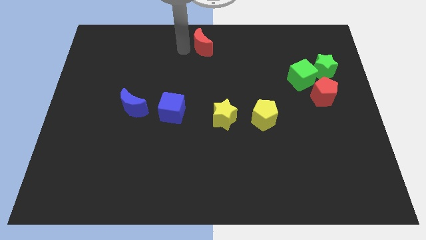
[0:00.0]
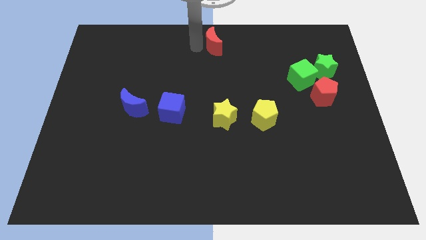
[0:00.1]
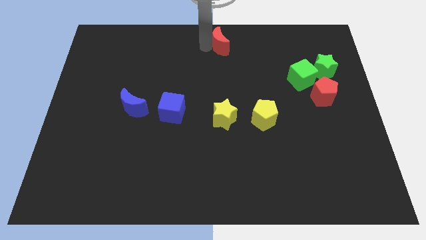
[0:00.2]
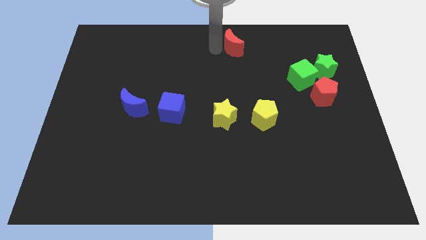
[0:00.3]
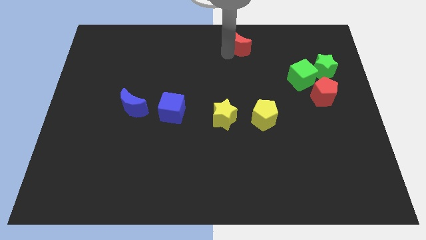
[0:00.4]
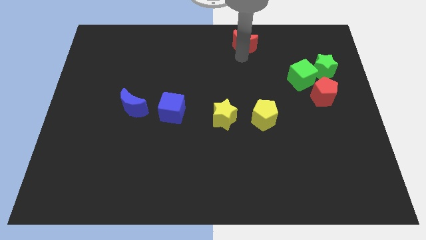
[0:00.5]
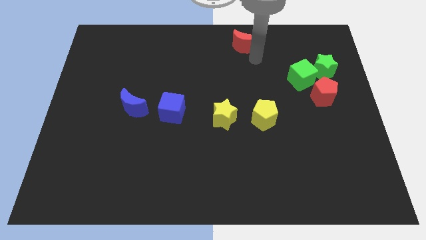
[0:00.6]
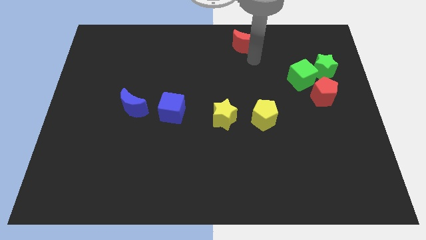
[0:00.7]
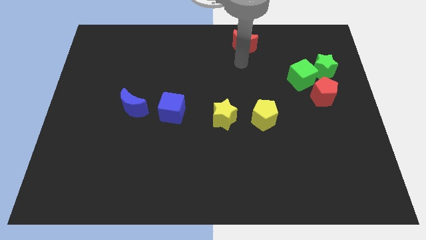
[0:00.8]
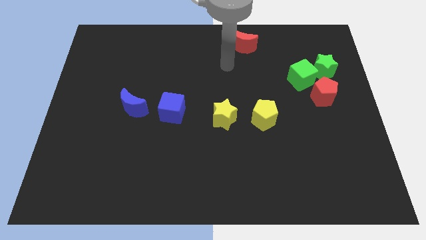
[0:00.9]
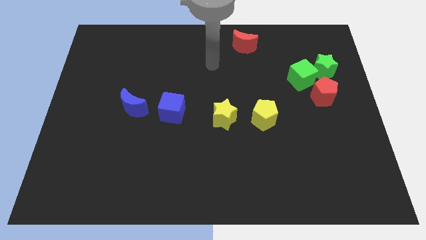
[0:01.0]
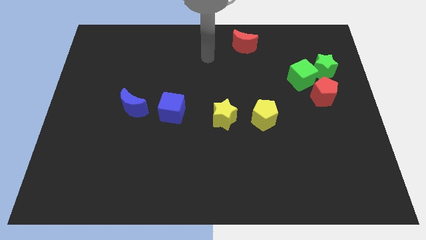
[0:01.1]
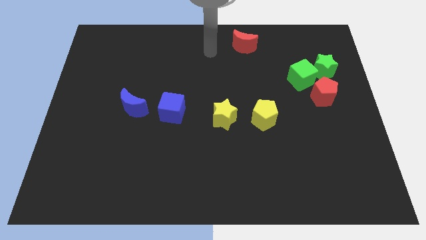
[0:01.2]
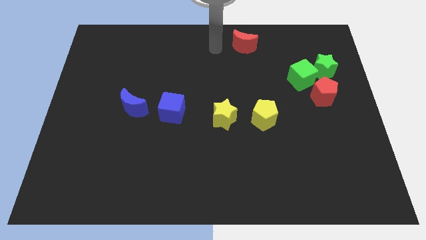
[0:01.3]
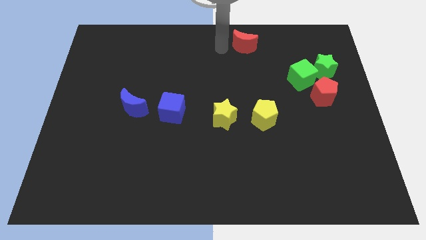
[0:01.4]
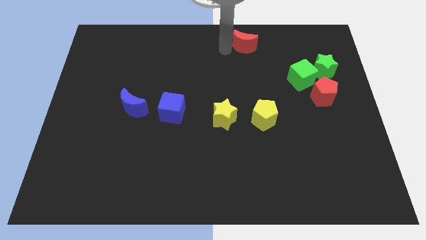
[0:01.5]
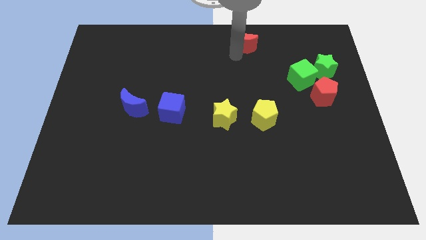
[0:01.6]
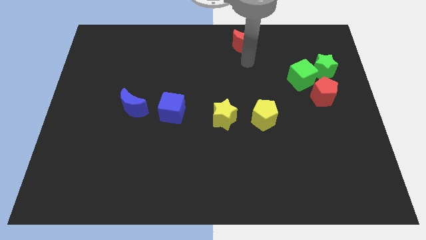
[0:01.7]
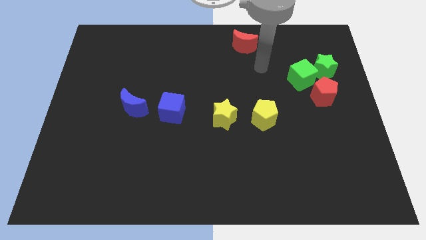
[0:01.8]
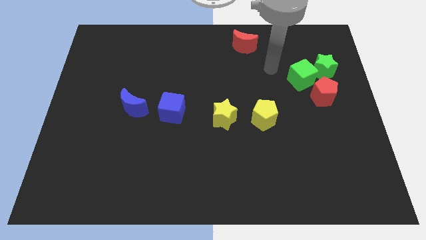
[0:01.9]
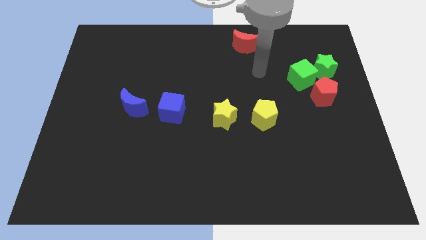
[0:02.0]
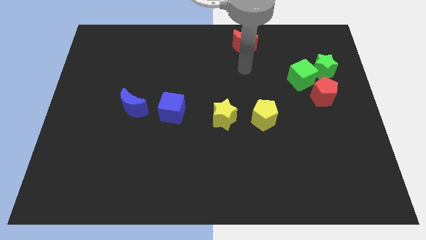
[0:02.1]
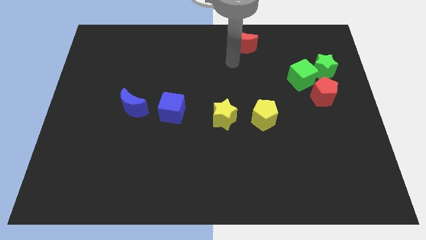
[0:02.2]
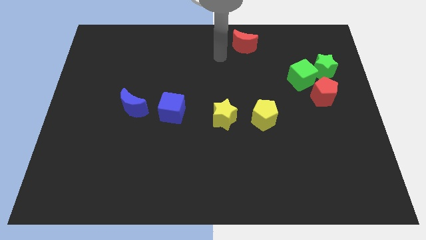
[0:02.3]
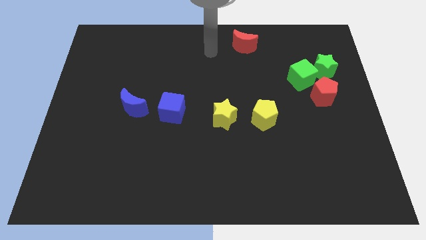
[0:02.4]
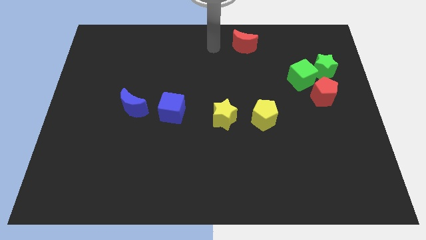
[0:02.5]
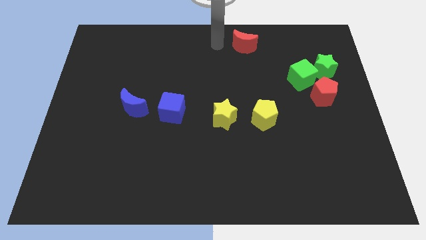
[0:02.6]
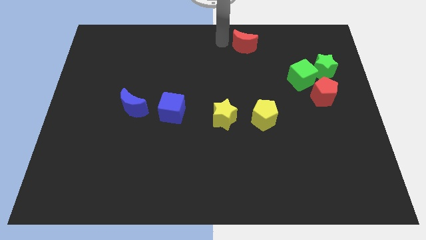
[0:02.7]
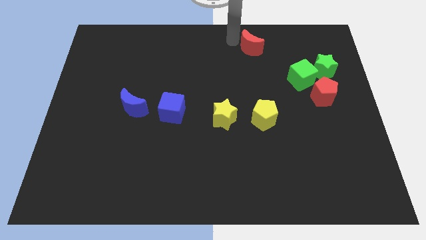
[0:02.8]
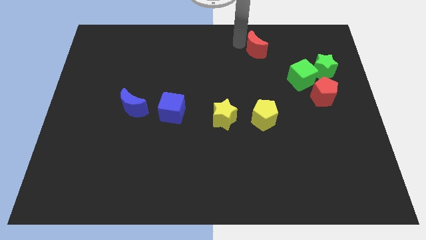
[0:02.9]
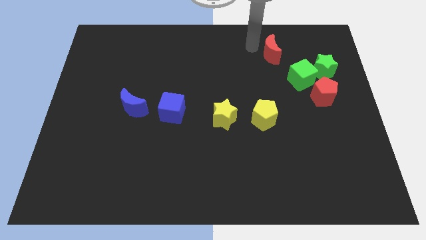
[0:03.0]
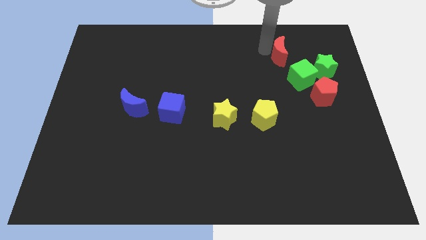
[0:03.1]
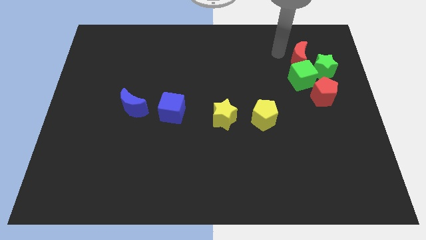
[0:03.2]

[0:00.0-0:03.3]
put the red crescent at the top of the green cube

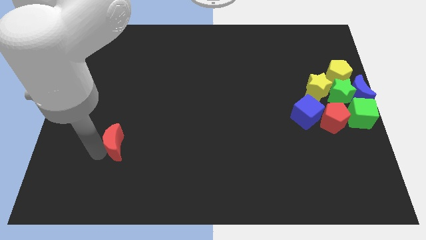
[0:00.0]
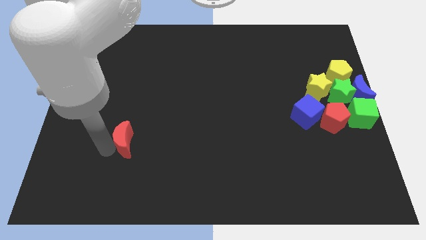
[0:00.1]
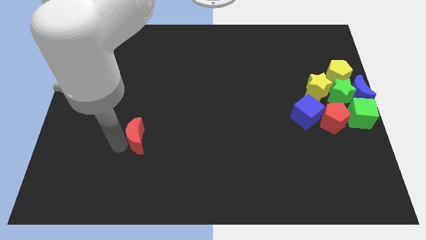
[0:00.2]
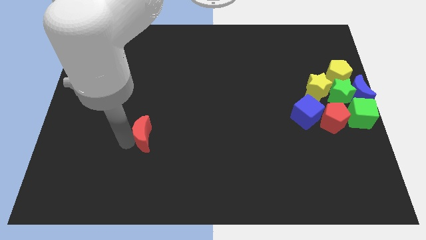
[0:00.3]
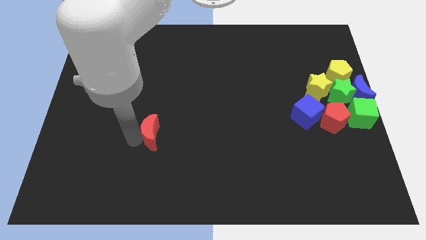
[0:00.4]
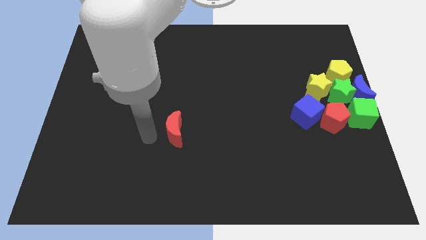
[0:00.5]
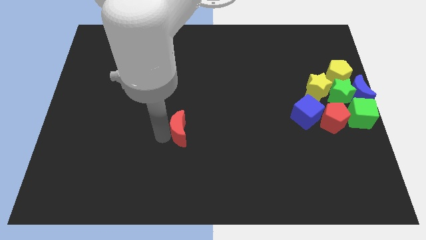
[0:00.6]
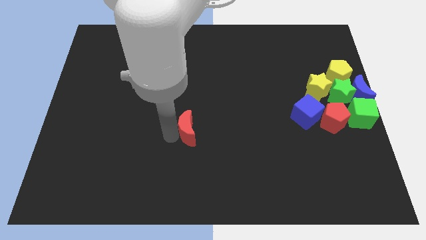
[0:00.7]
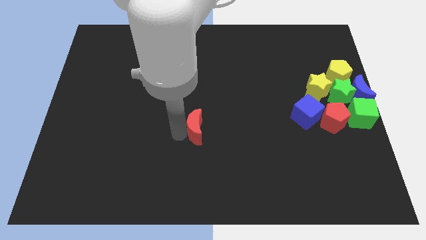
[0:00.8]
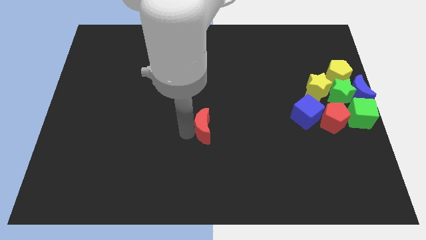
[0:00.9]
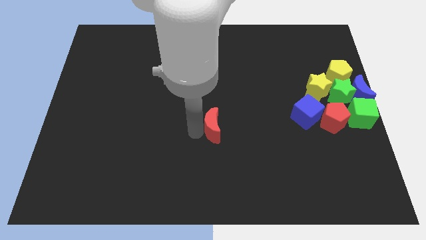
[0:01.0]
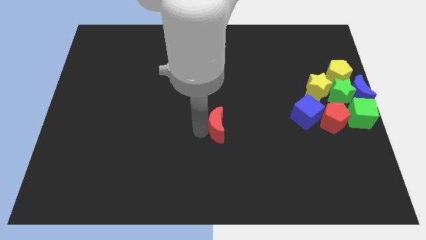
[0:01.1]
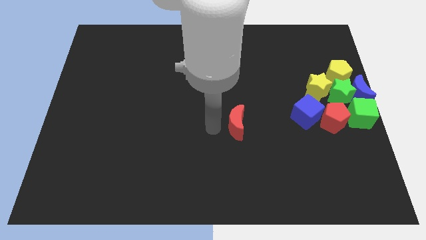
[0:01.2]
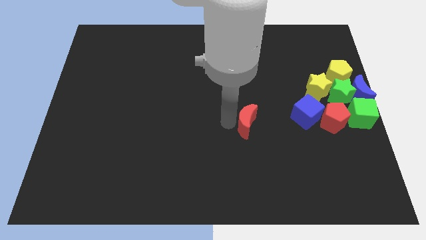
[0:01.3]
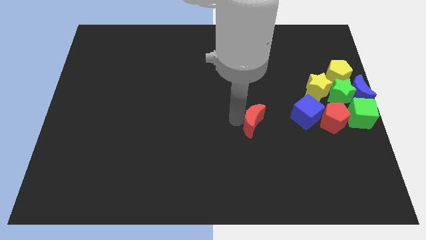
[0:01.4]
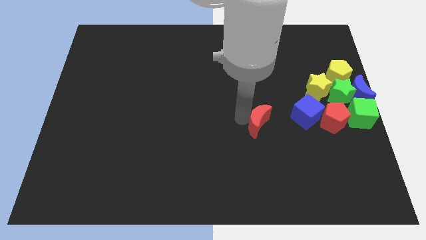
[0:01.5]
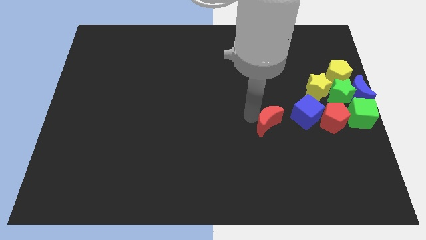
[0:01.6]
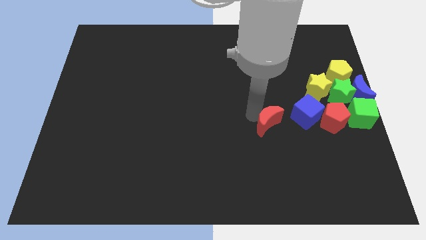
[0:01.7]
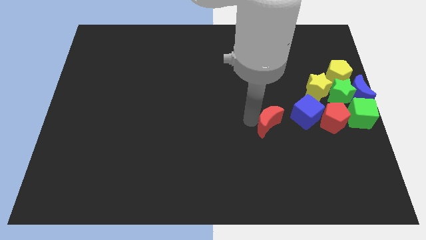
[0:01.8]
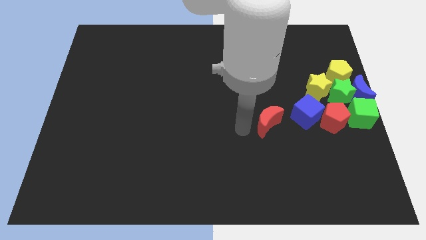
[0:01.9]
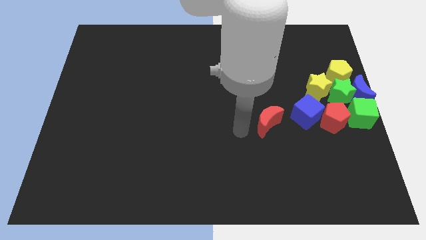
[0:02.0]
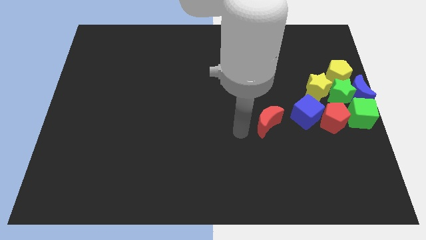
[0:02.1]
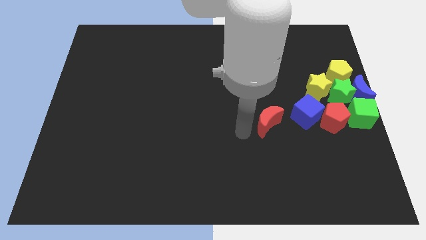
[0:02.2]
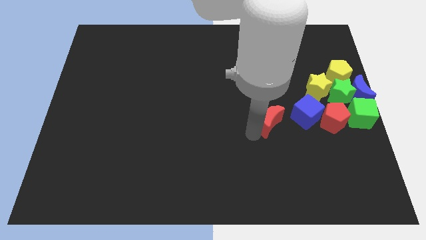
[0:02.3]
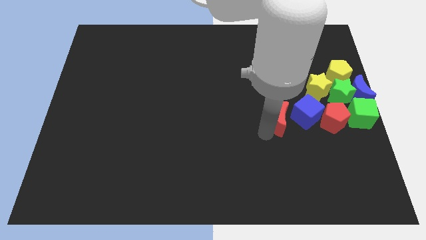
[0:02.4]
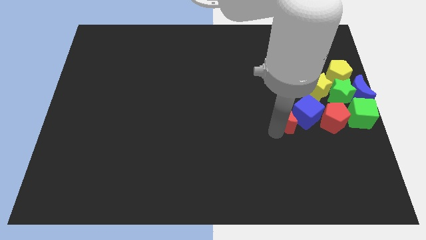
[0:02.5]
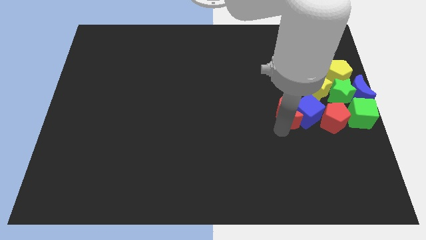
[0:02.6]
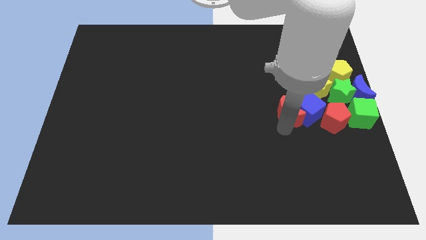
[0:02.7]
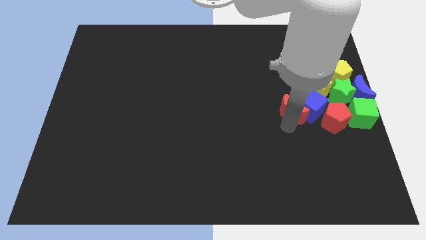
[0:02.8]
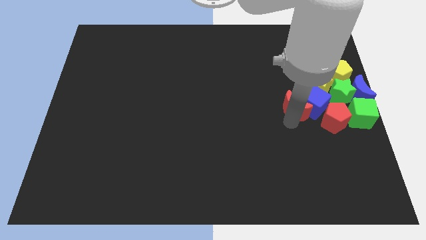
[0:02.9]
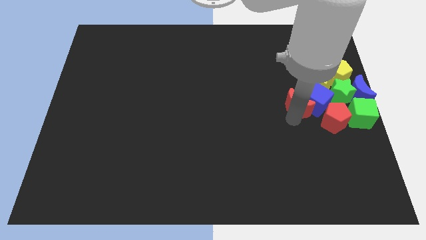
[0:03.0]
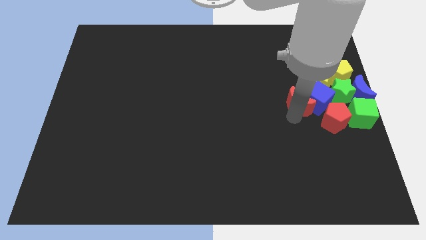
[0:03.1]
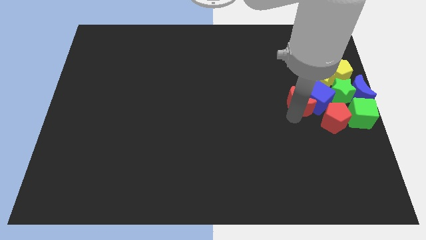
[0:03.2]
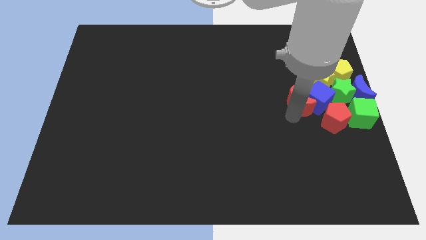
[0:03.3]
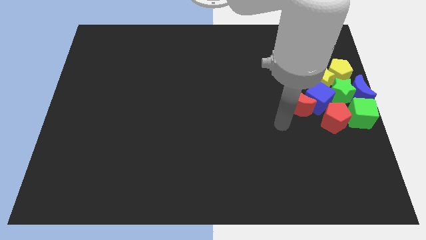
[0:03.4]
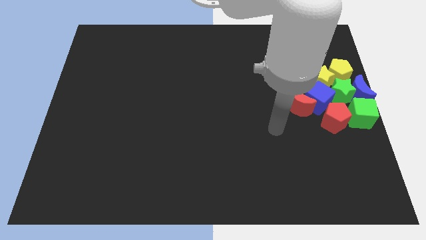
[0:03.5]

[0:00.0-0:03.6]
move the red moon into the blue cube

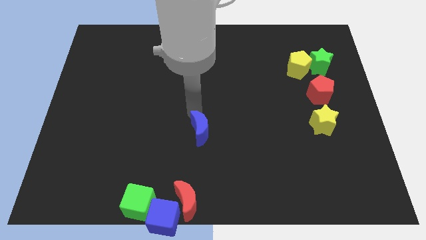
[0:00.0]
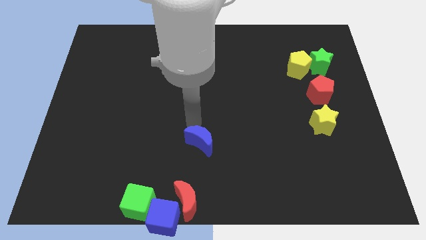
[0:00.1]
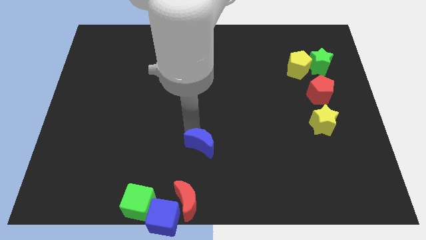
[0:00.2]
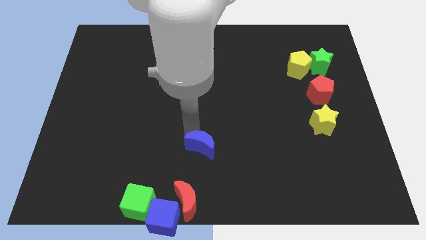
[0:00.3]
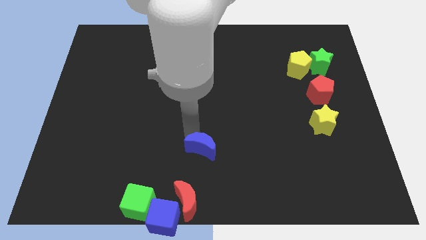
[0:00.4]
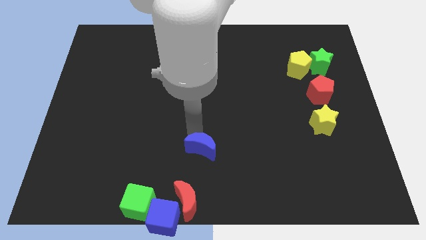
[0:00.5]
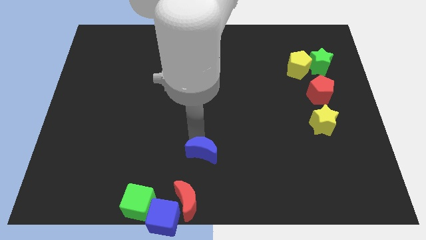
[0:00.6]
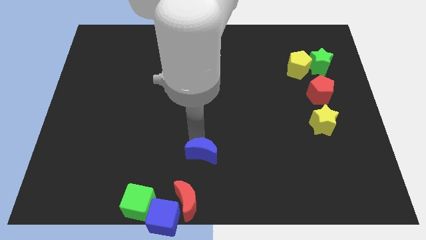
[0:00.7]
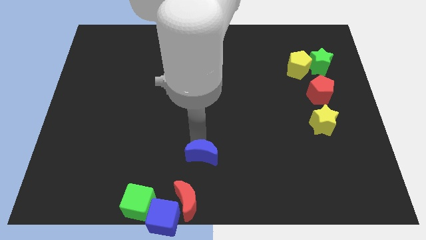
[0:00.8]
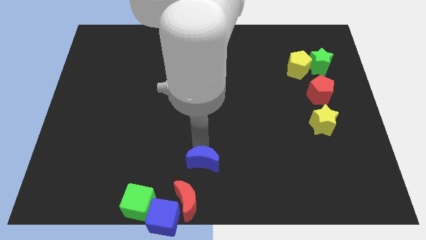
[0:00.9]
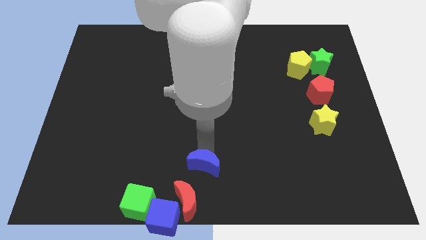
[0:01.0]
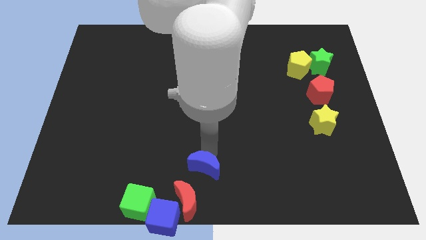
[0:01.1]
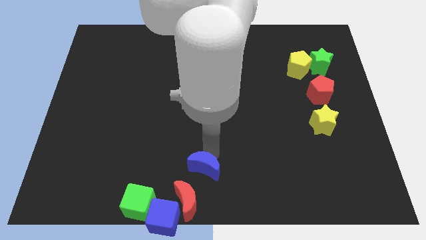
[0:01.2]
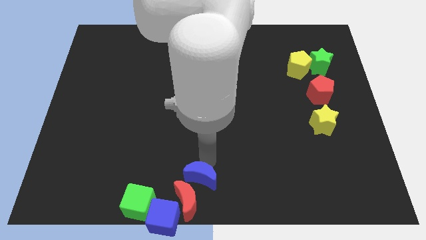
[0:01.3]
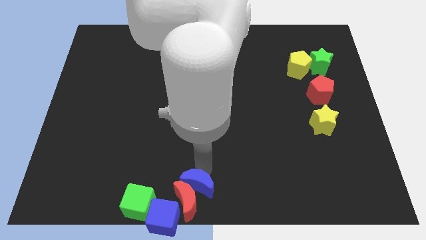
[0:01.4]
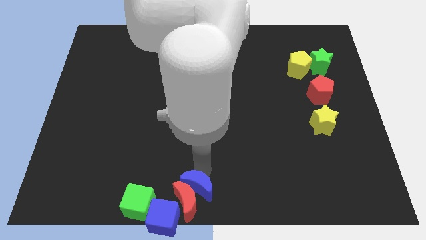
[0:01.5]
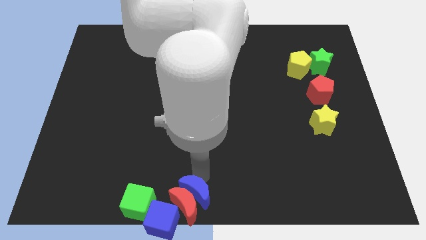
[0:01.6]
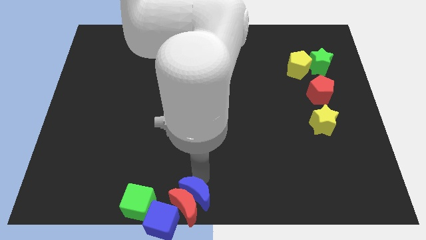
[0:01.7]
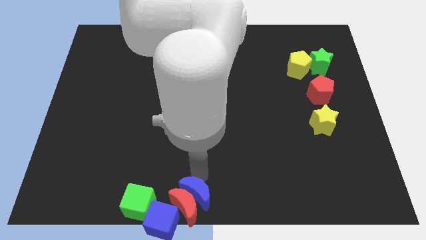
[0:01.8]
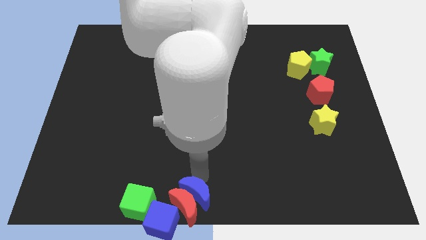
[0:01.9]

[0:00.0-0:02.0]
push the blue crescent into the red crescent
